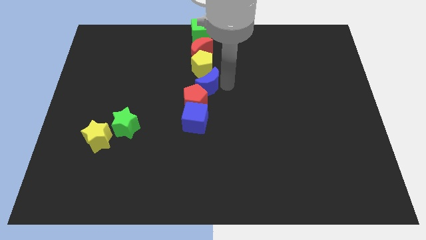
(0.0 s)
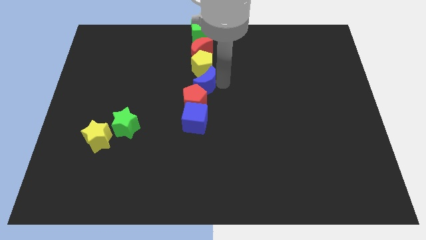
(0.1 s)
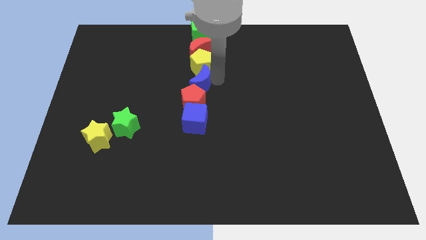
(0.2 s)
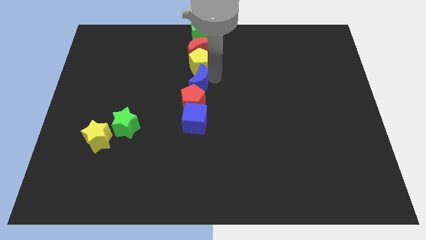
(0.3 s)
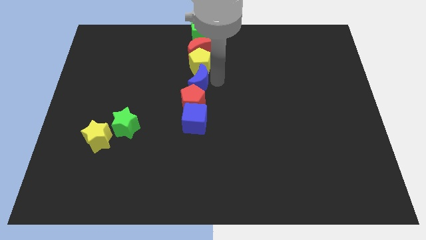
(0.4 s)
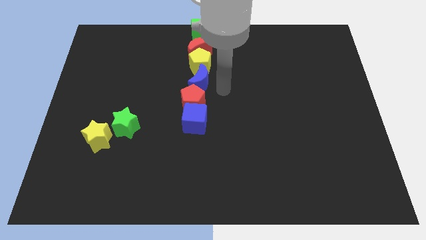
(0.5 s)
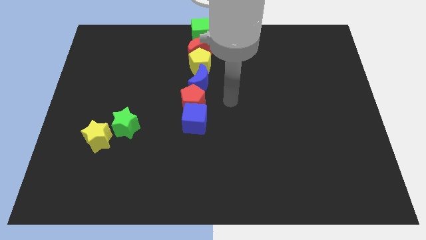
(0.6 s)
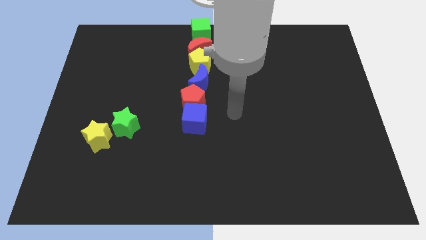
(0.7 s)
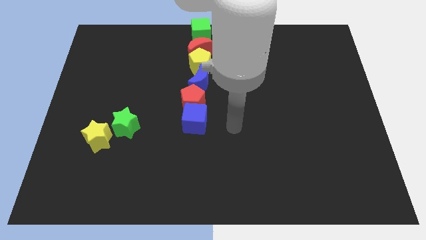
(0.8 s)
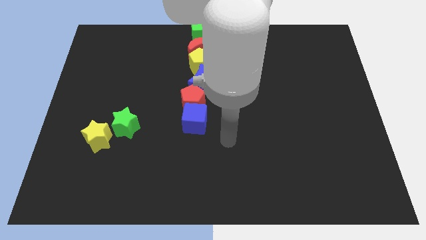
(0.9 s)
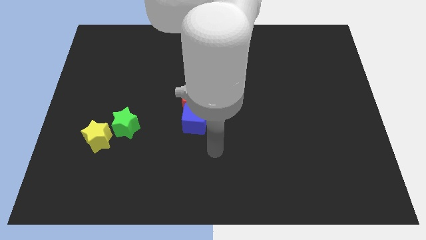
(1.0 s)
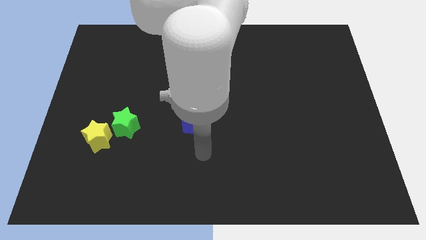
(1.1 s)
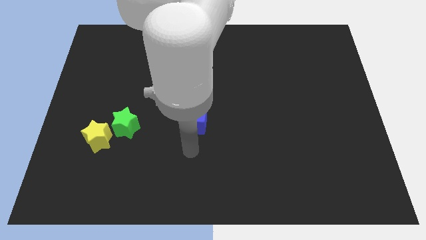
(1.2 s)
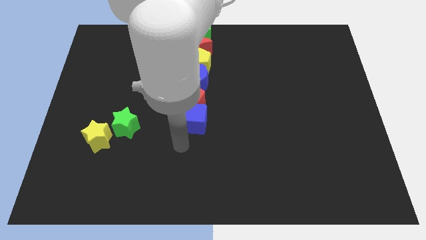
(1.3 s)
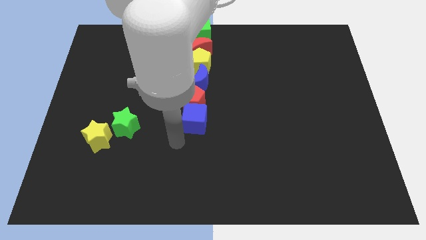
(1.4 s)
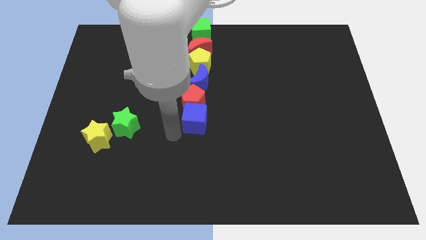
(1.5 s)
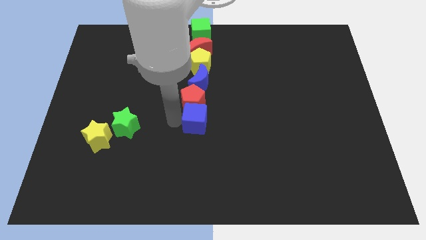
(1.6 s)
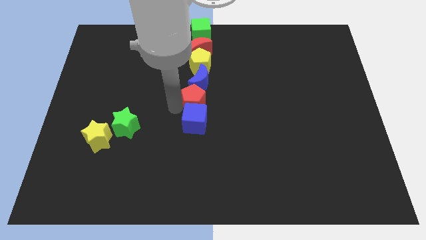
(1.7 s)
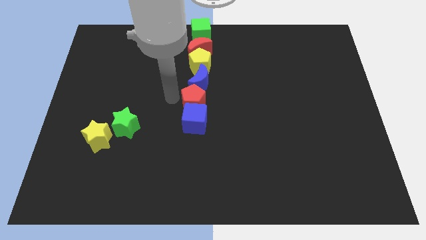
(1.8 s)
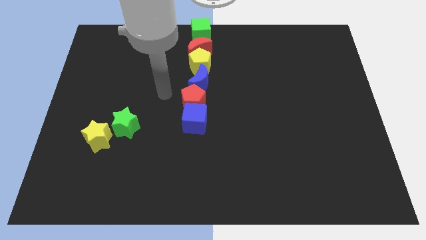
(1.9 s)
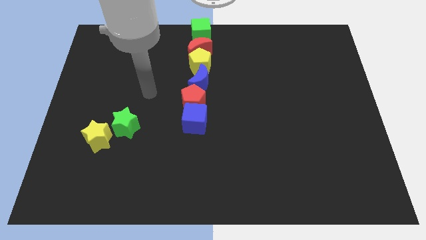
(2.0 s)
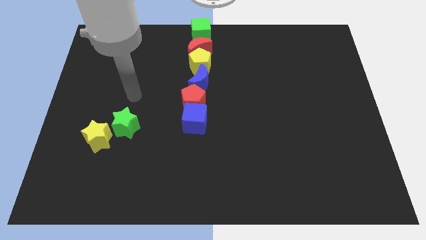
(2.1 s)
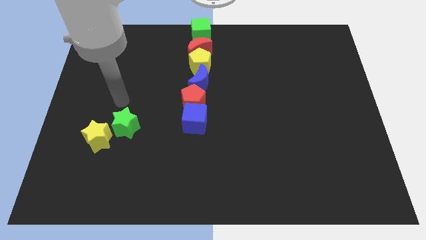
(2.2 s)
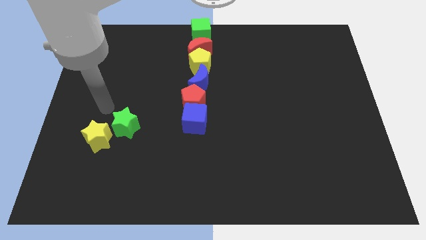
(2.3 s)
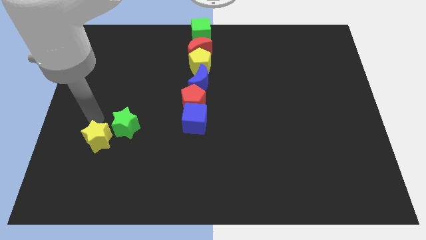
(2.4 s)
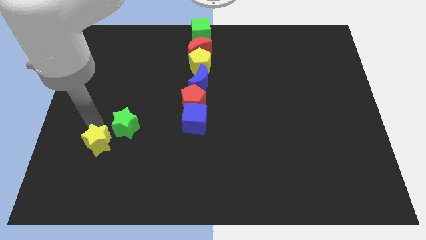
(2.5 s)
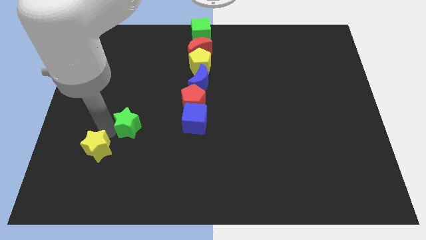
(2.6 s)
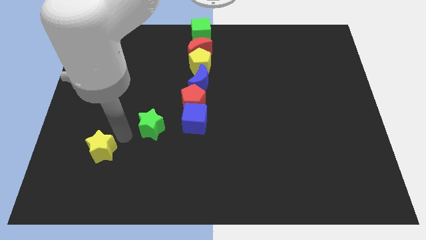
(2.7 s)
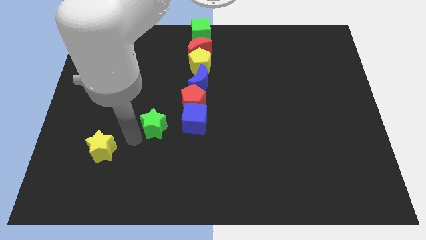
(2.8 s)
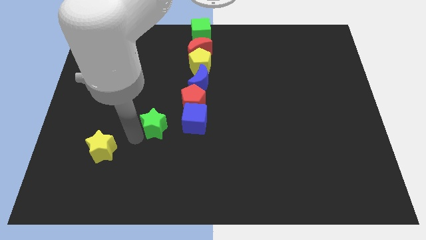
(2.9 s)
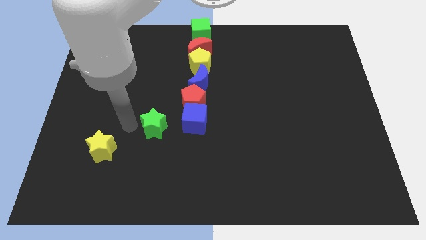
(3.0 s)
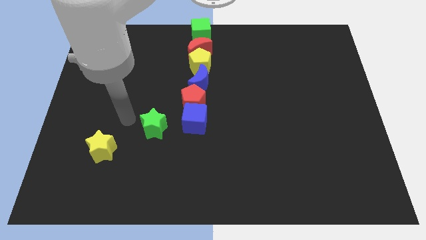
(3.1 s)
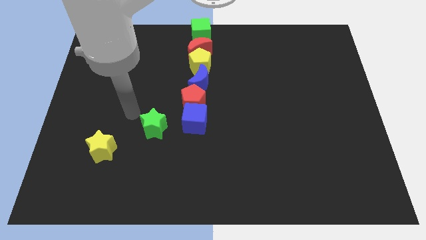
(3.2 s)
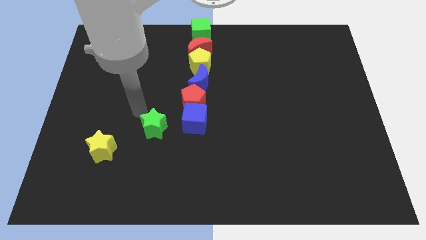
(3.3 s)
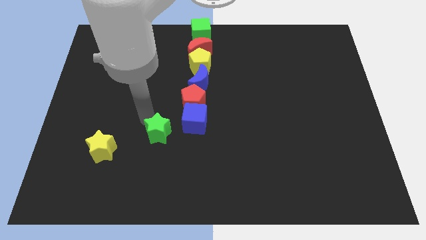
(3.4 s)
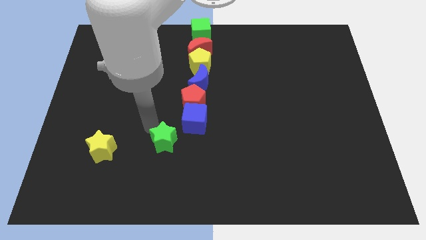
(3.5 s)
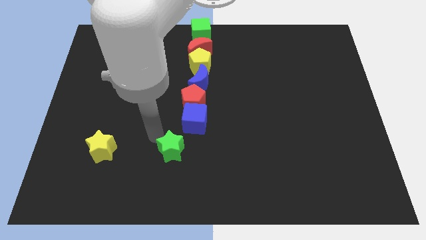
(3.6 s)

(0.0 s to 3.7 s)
move the green star towards right

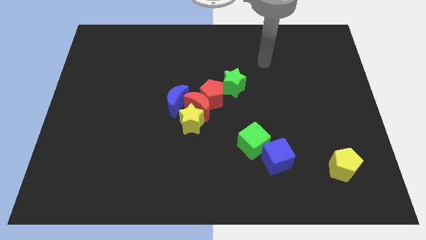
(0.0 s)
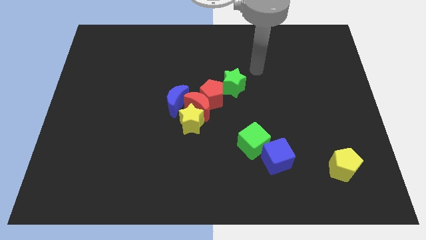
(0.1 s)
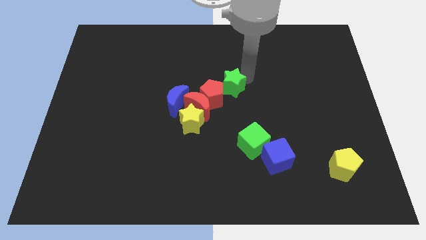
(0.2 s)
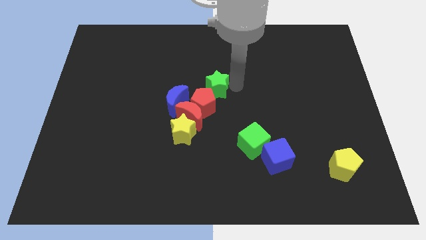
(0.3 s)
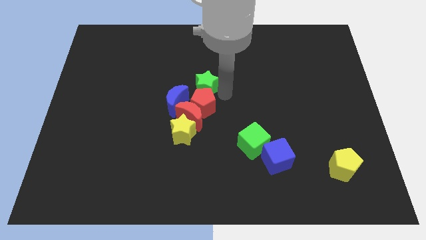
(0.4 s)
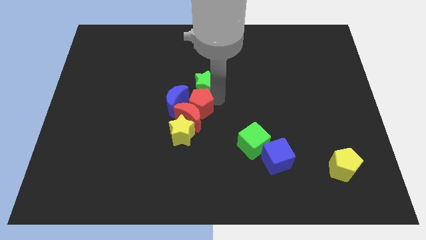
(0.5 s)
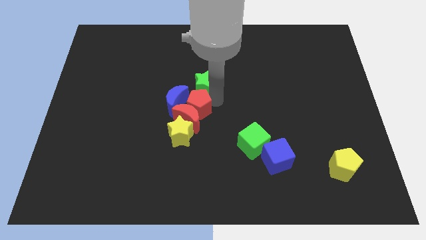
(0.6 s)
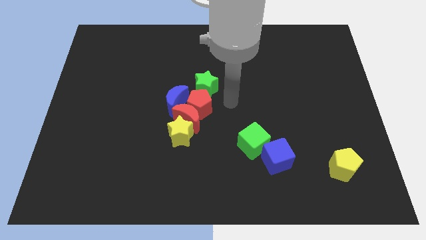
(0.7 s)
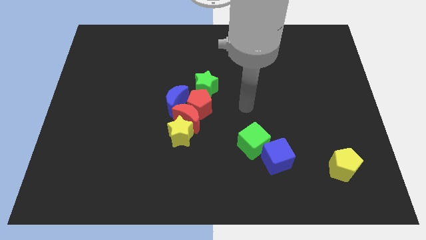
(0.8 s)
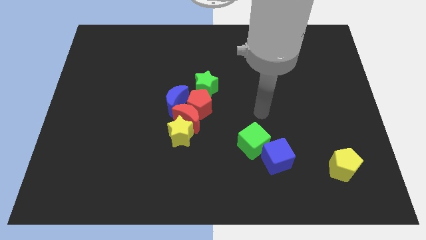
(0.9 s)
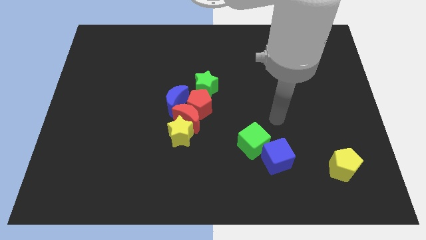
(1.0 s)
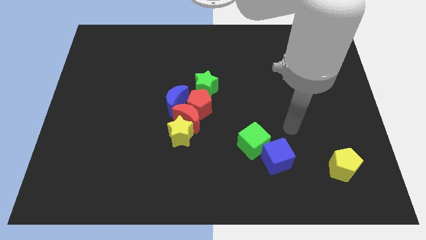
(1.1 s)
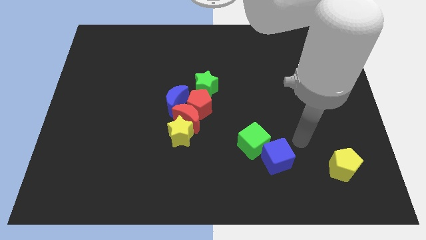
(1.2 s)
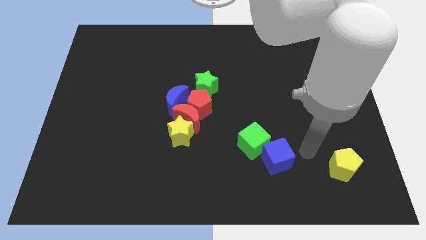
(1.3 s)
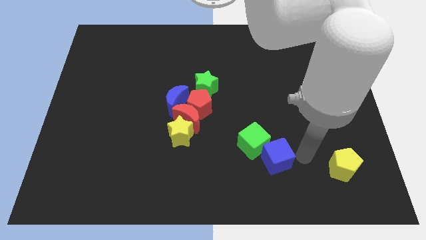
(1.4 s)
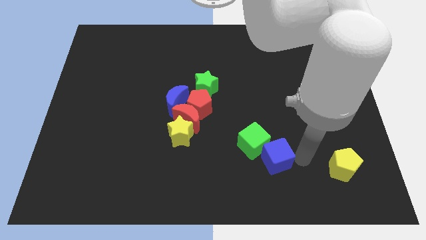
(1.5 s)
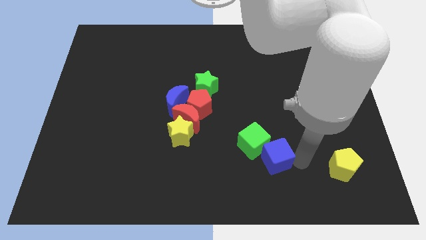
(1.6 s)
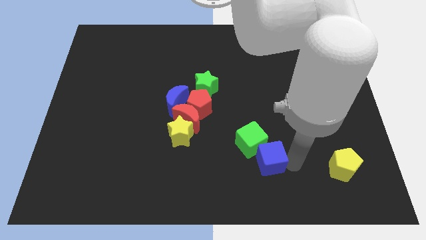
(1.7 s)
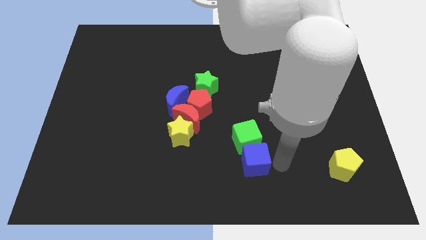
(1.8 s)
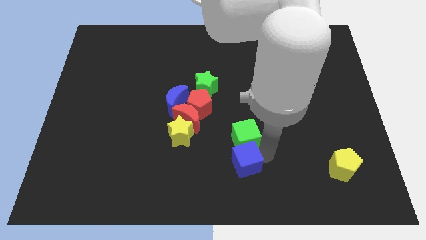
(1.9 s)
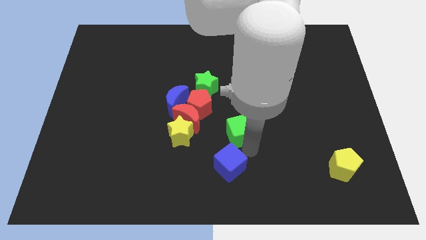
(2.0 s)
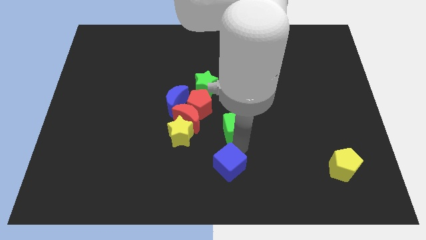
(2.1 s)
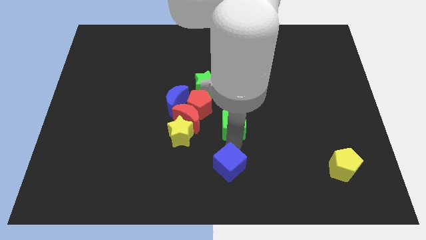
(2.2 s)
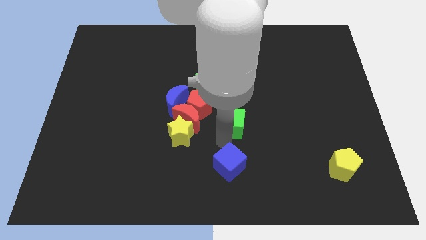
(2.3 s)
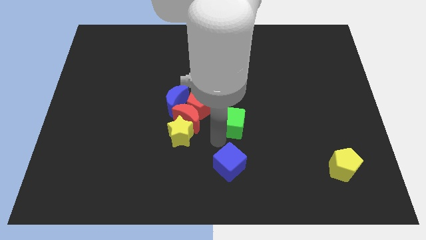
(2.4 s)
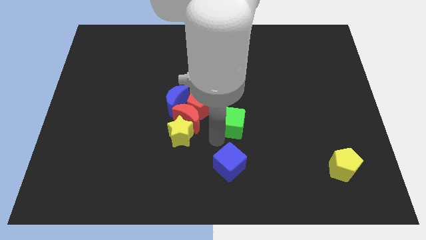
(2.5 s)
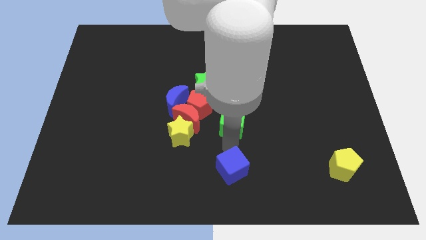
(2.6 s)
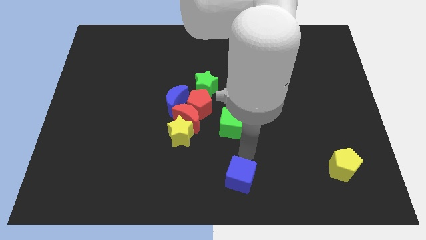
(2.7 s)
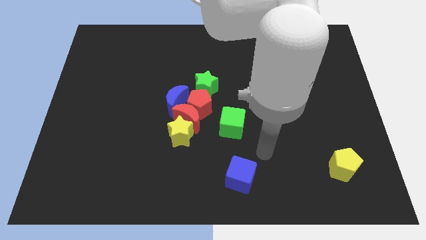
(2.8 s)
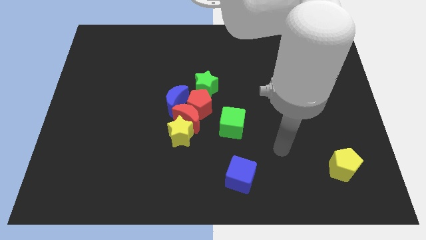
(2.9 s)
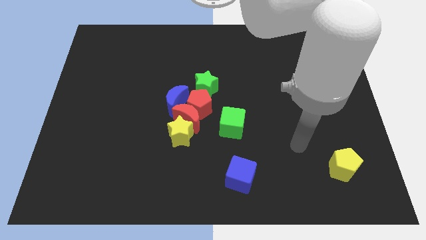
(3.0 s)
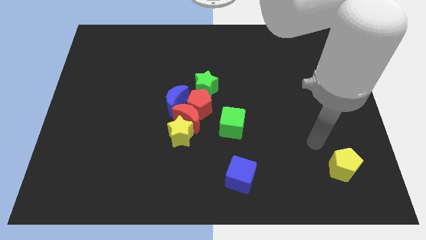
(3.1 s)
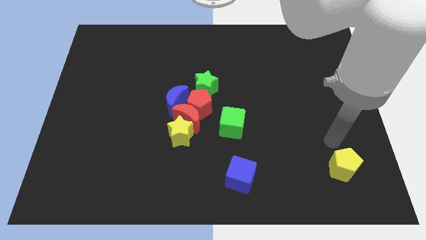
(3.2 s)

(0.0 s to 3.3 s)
separate the green cube from the blue cube

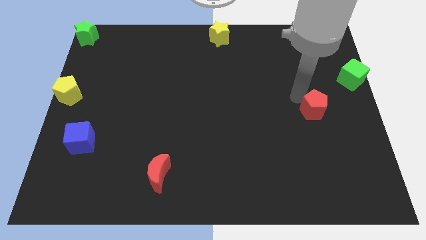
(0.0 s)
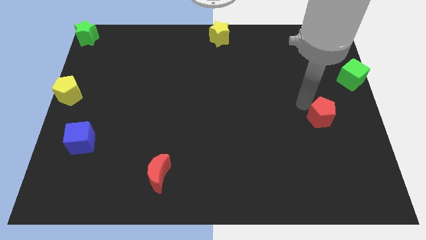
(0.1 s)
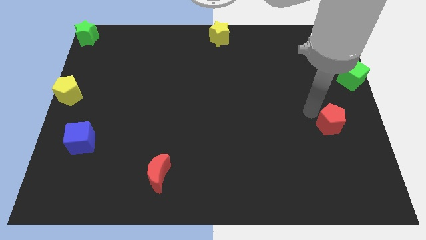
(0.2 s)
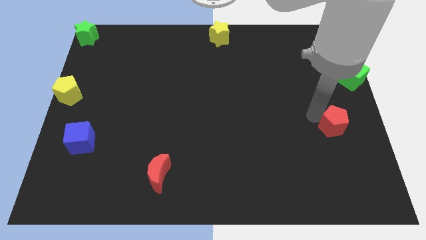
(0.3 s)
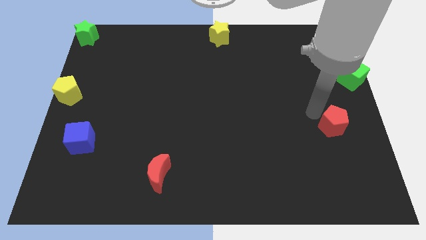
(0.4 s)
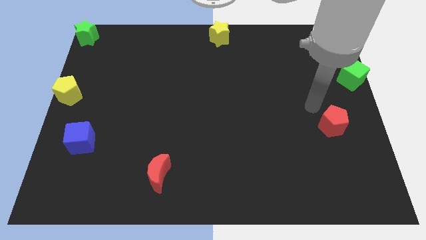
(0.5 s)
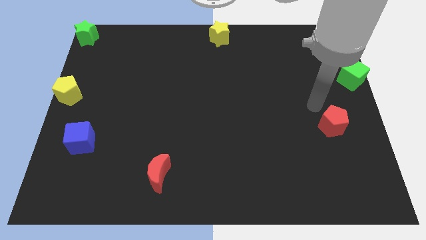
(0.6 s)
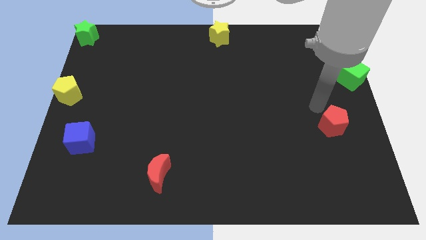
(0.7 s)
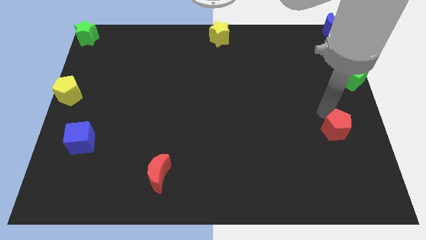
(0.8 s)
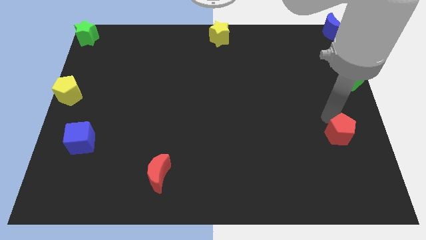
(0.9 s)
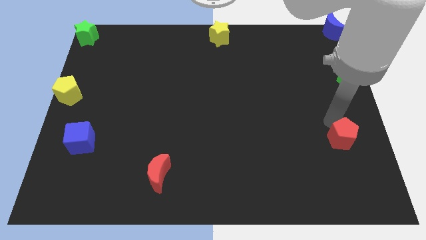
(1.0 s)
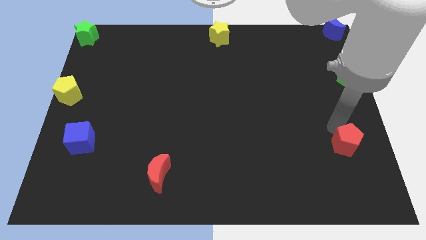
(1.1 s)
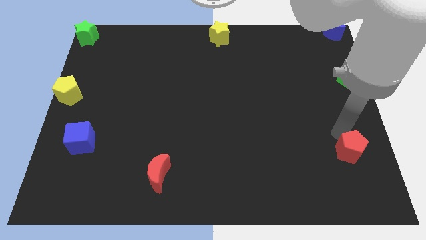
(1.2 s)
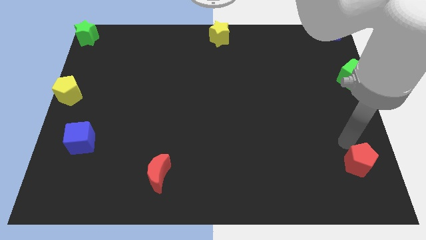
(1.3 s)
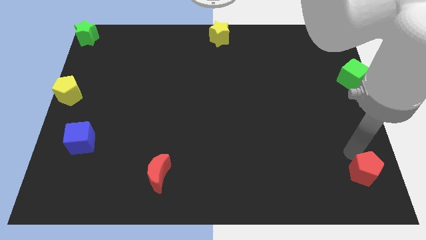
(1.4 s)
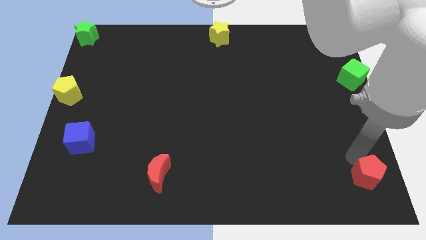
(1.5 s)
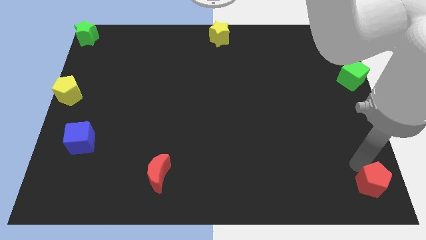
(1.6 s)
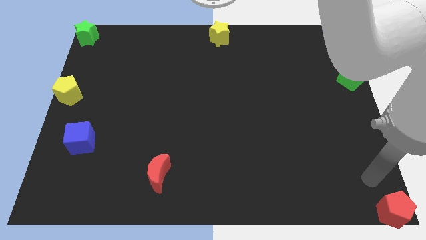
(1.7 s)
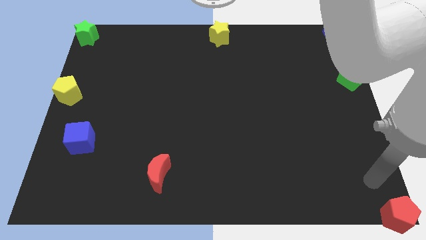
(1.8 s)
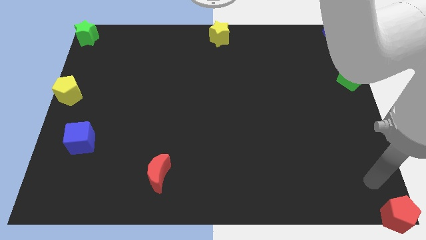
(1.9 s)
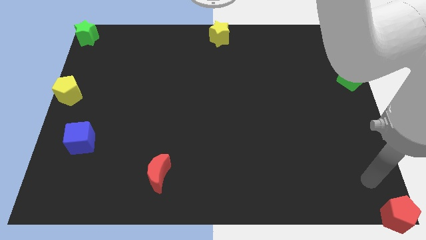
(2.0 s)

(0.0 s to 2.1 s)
move the red pentagon to the bottom right
